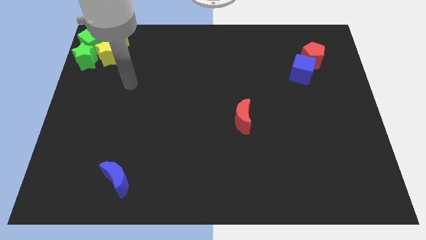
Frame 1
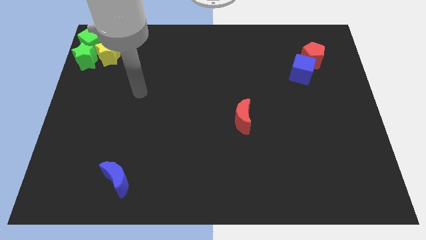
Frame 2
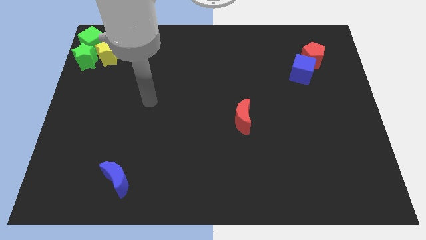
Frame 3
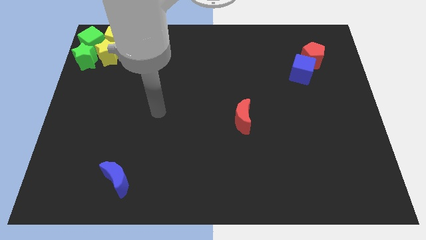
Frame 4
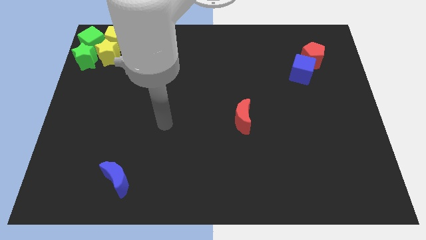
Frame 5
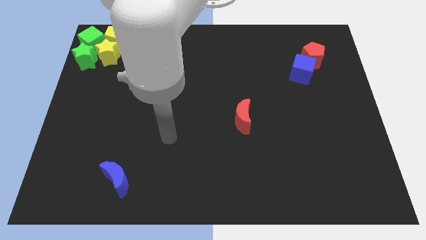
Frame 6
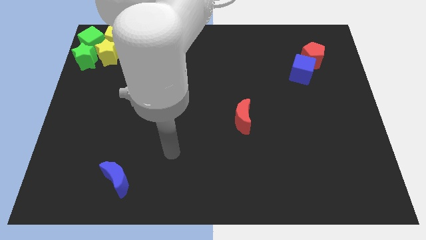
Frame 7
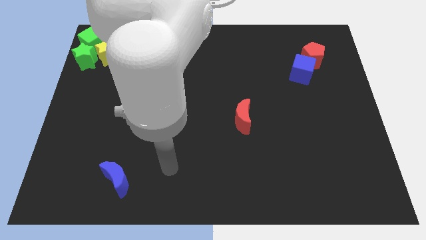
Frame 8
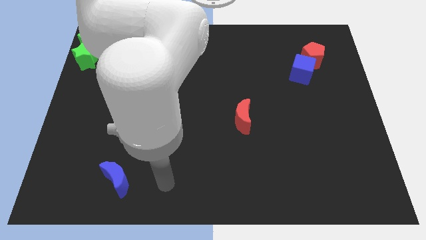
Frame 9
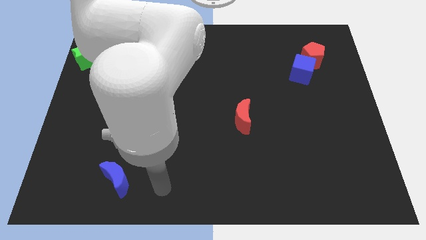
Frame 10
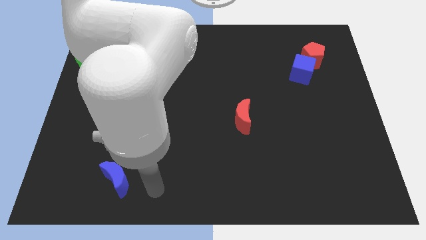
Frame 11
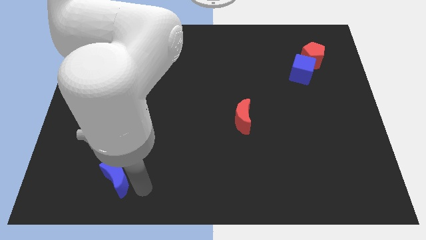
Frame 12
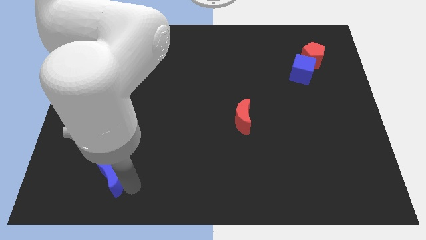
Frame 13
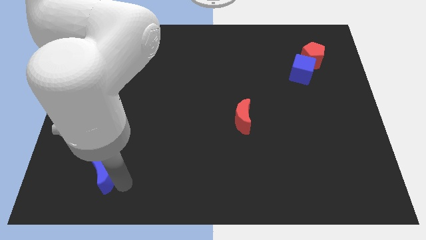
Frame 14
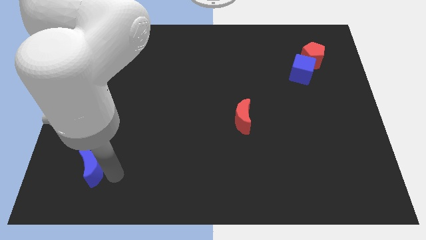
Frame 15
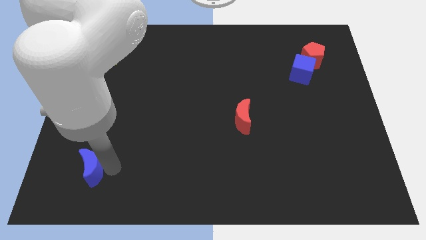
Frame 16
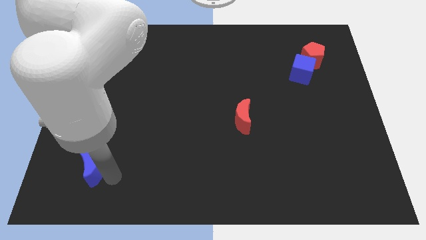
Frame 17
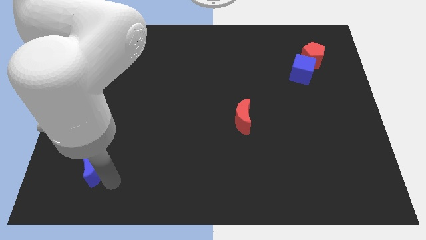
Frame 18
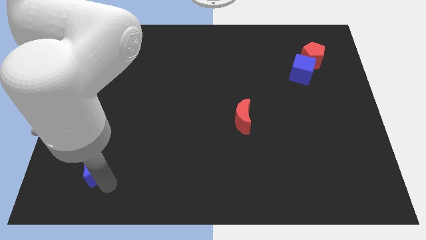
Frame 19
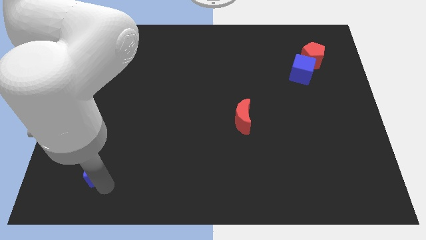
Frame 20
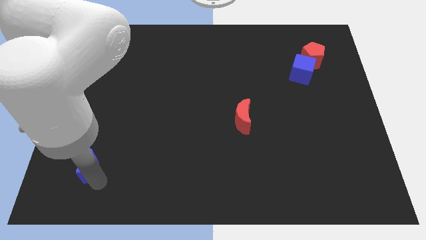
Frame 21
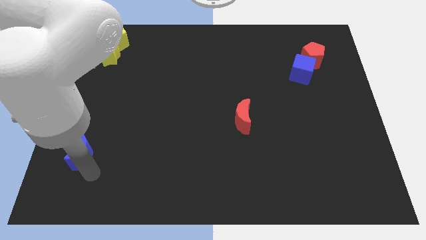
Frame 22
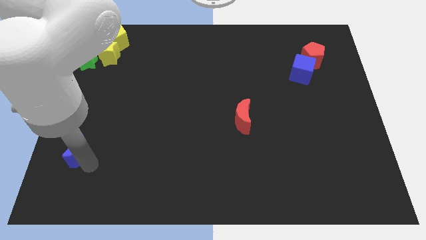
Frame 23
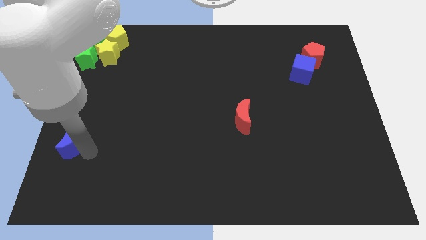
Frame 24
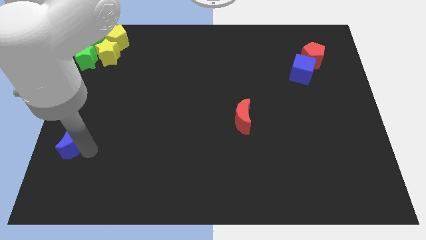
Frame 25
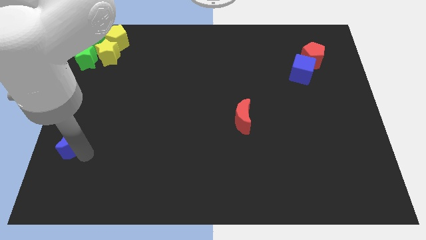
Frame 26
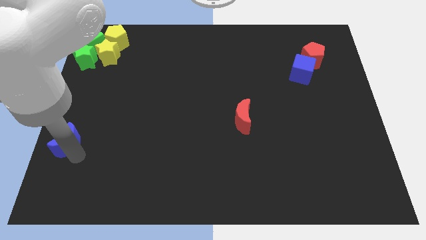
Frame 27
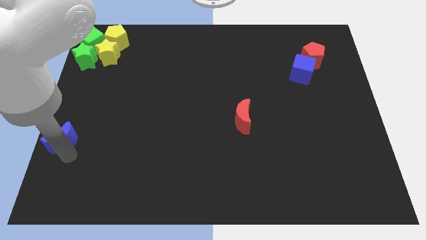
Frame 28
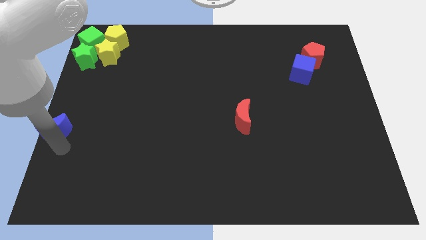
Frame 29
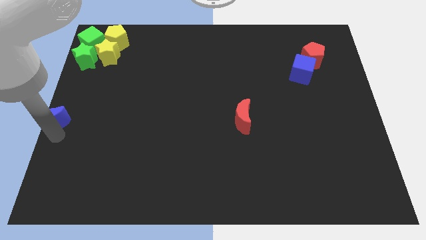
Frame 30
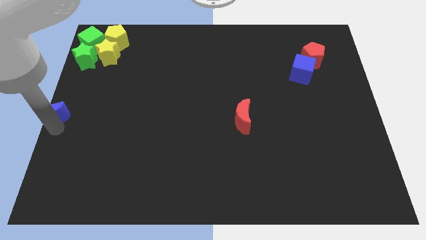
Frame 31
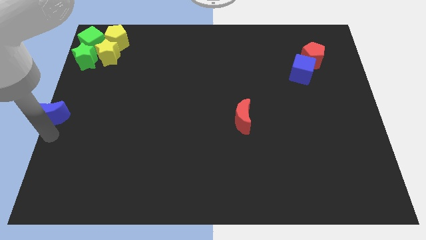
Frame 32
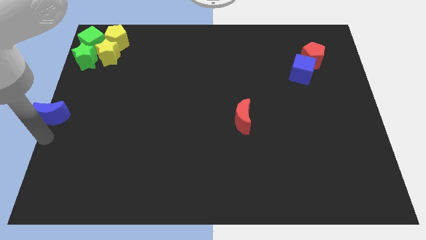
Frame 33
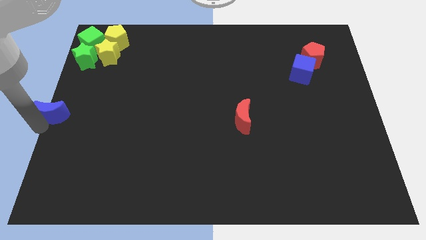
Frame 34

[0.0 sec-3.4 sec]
move the blue crescent towards the left side of the board

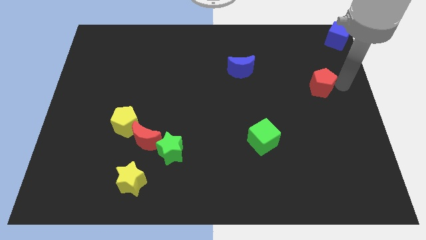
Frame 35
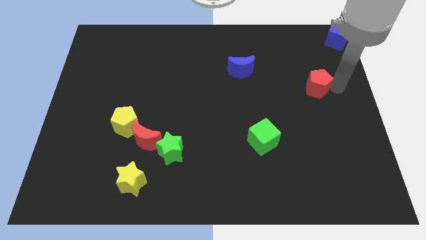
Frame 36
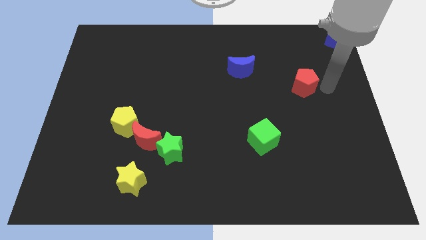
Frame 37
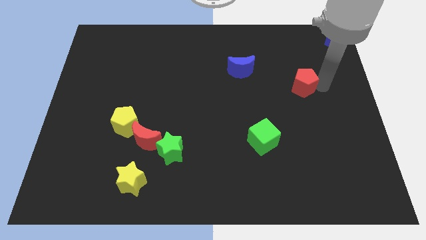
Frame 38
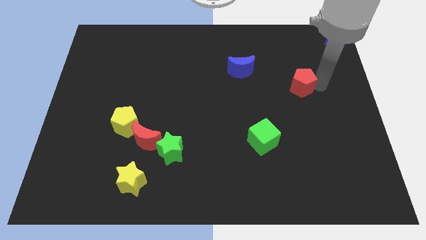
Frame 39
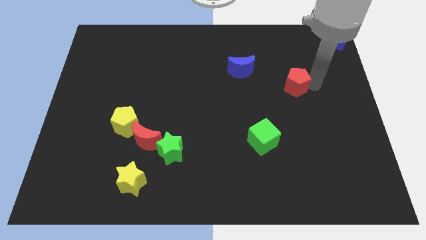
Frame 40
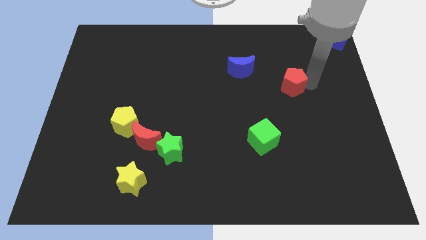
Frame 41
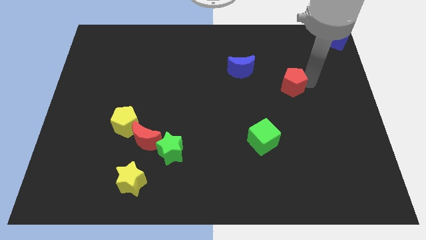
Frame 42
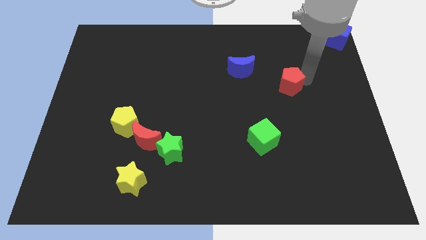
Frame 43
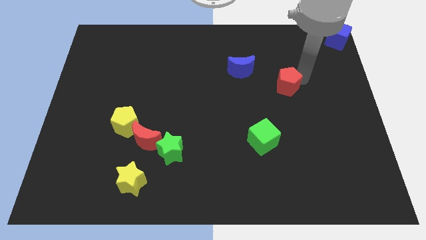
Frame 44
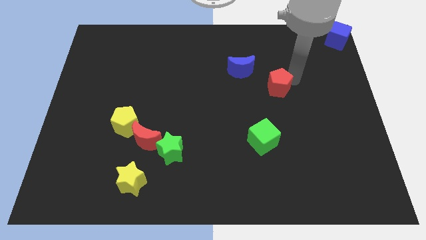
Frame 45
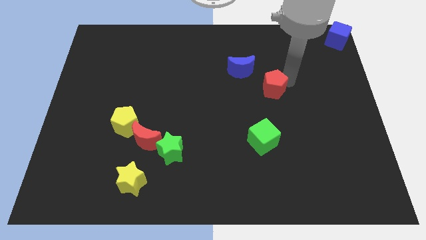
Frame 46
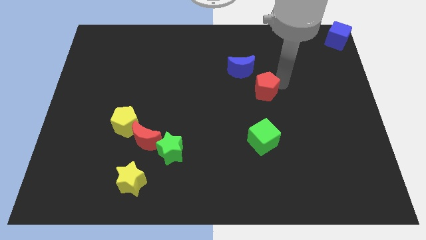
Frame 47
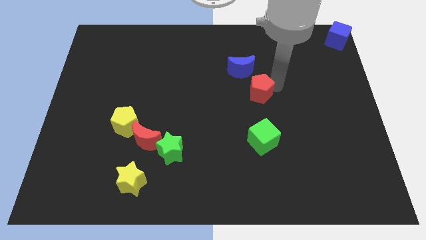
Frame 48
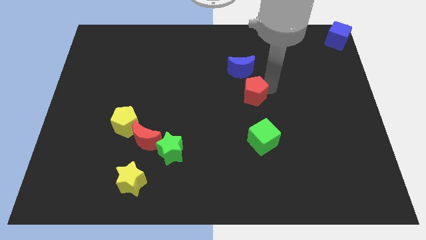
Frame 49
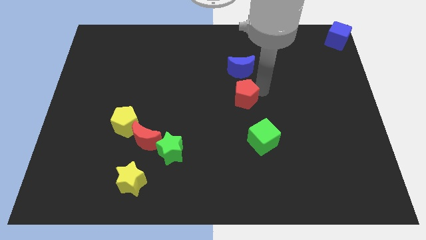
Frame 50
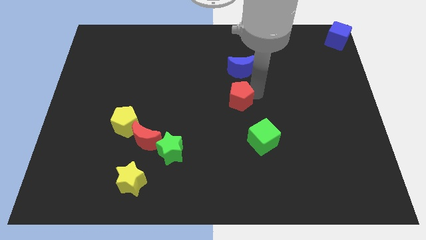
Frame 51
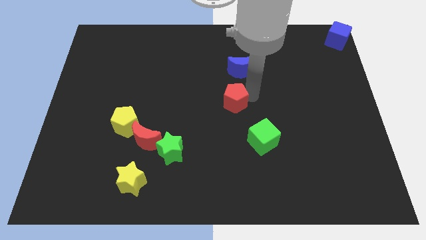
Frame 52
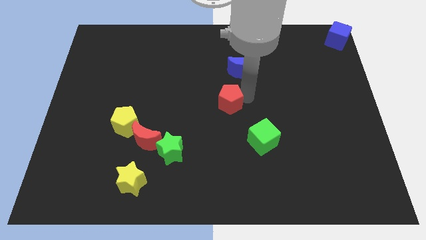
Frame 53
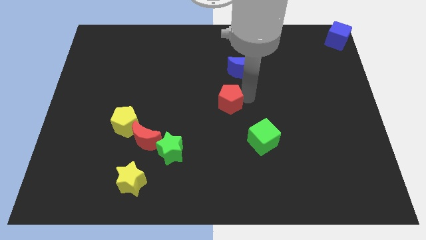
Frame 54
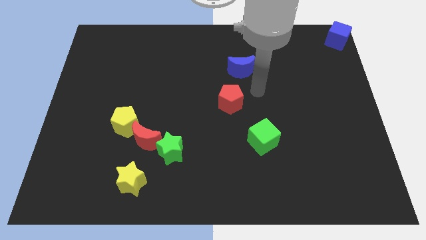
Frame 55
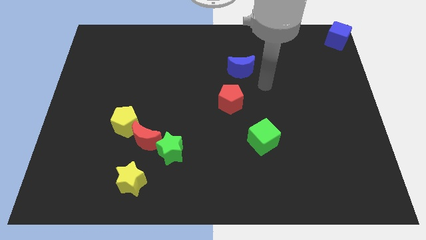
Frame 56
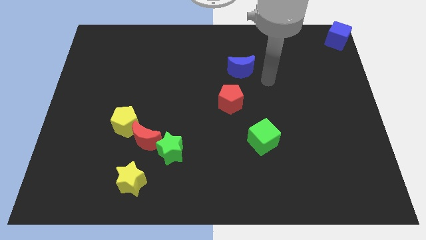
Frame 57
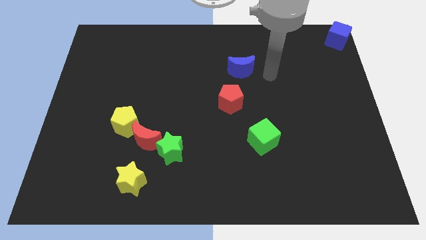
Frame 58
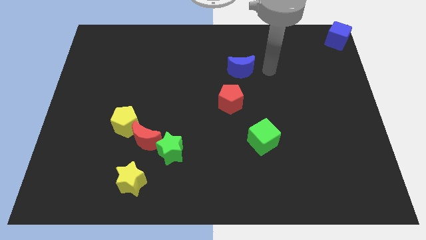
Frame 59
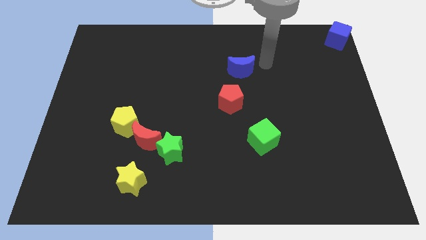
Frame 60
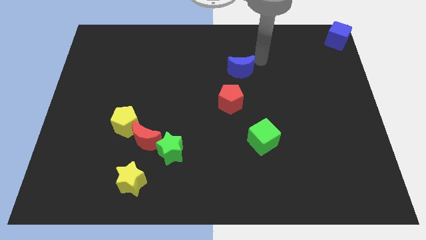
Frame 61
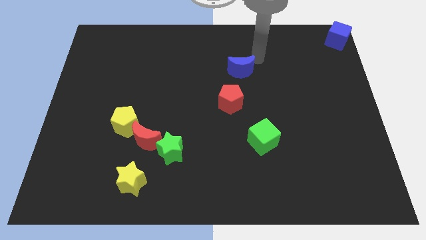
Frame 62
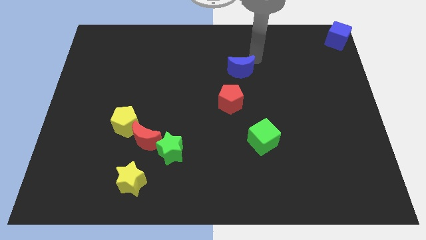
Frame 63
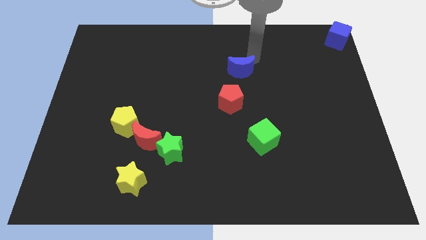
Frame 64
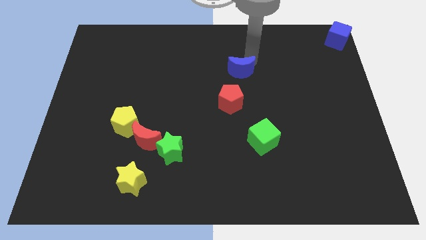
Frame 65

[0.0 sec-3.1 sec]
place the red pentagon diagonally to the blue moon

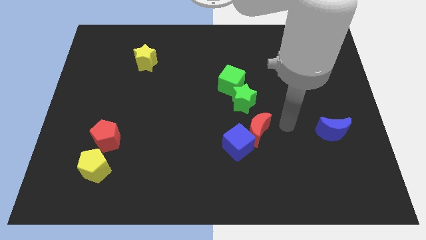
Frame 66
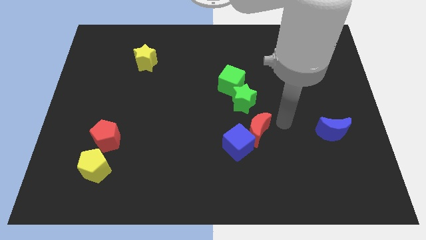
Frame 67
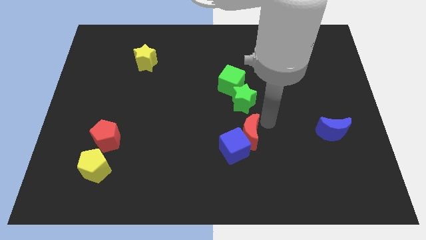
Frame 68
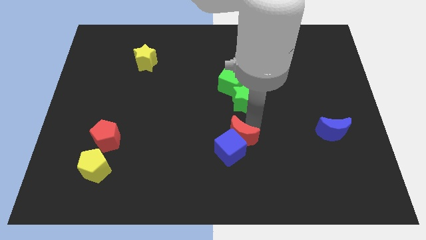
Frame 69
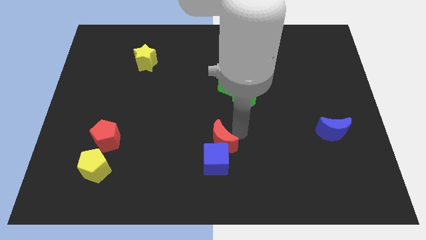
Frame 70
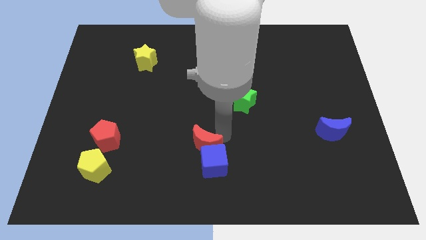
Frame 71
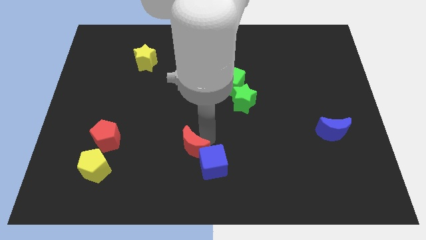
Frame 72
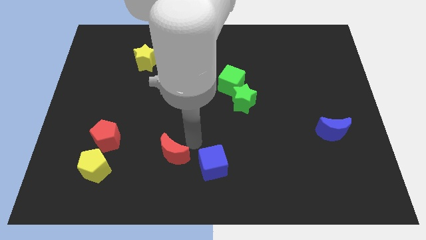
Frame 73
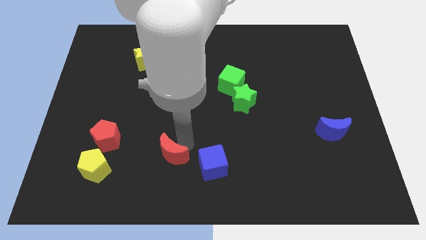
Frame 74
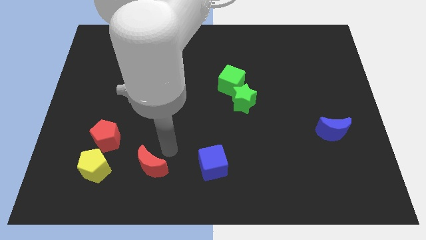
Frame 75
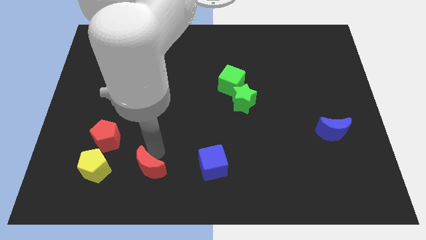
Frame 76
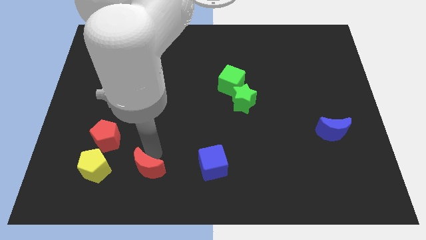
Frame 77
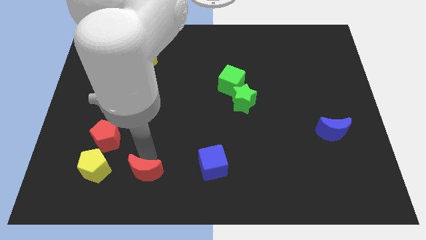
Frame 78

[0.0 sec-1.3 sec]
slide the red moon to the right of the yellow pentagon

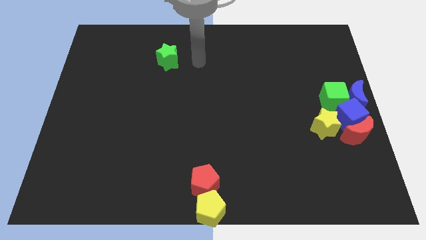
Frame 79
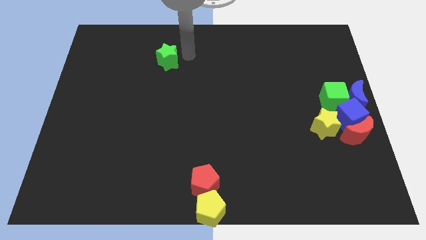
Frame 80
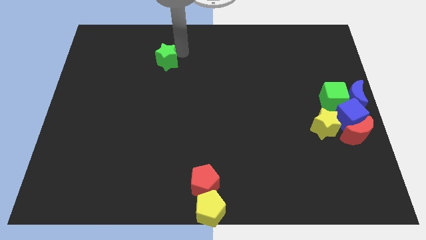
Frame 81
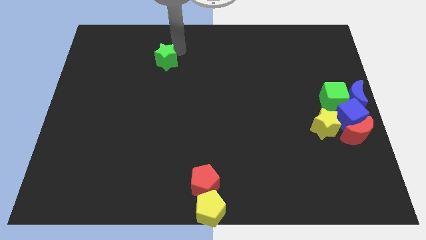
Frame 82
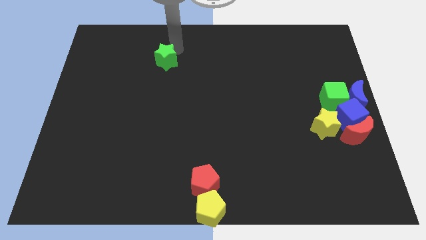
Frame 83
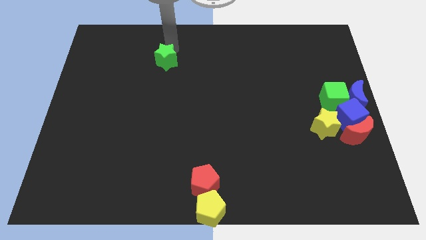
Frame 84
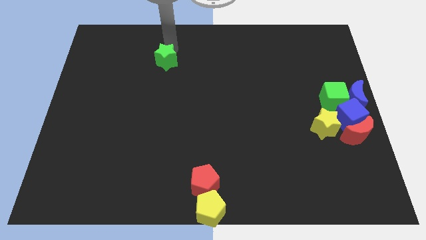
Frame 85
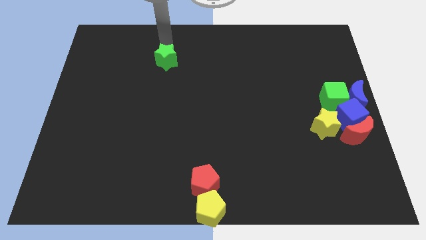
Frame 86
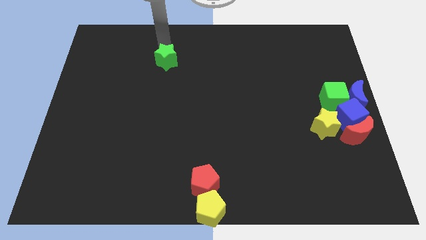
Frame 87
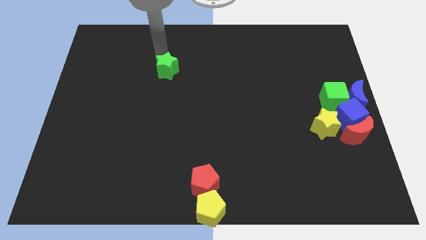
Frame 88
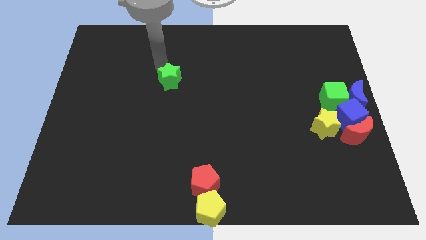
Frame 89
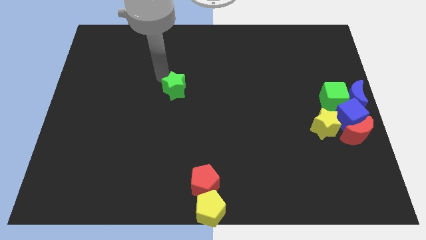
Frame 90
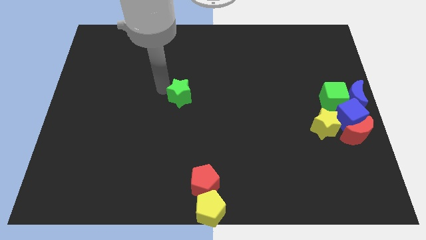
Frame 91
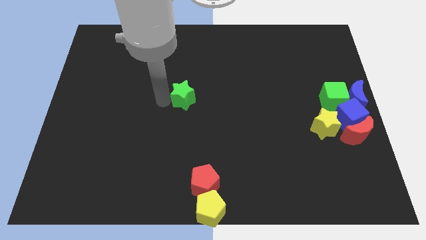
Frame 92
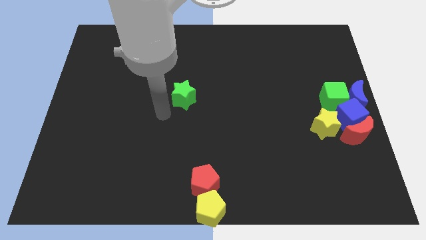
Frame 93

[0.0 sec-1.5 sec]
push the green star towards center
